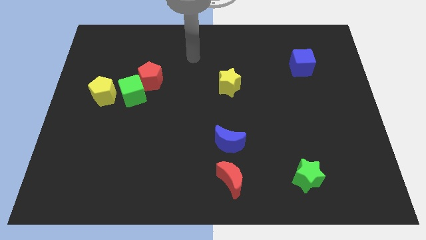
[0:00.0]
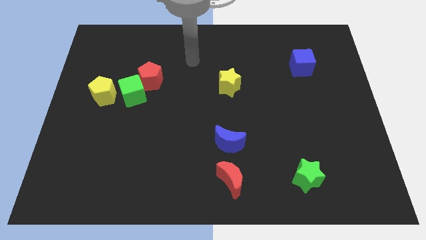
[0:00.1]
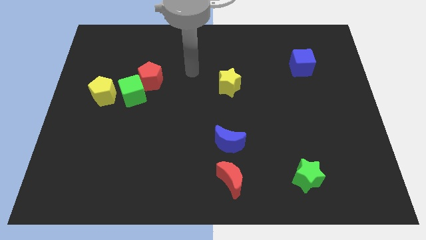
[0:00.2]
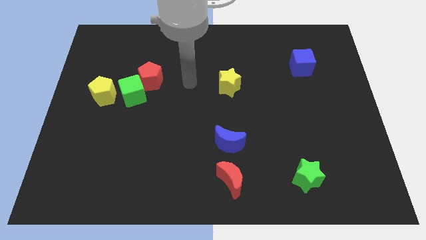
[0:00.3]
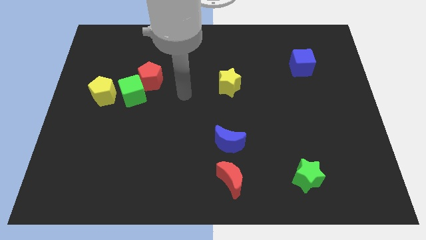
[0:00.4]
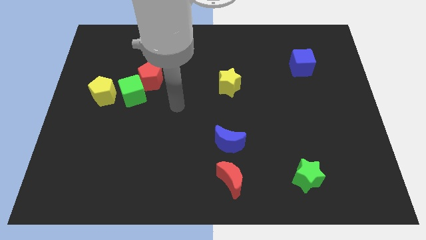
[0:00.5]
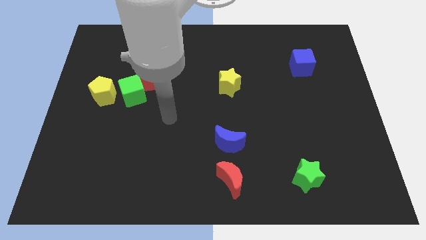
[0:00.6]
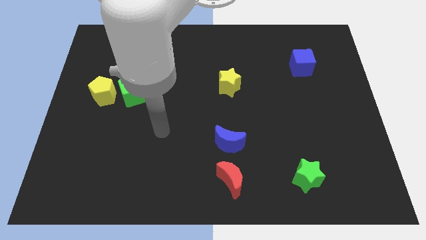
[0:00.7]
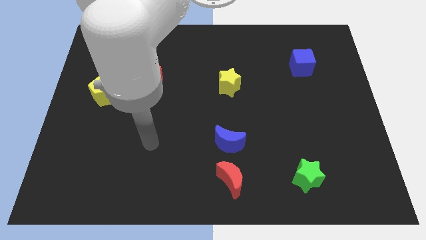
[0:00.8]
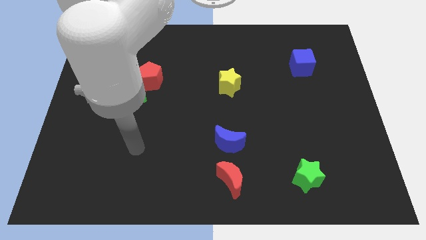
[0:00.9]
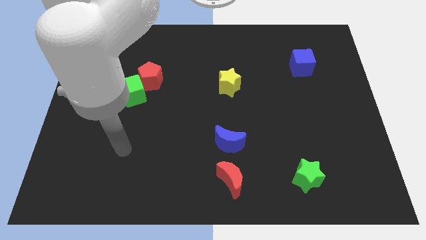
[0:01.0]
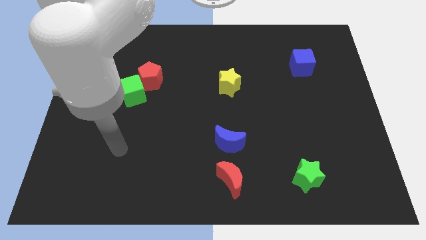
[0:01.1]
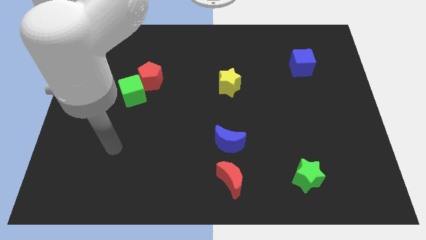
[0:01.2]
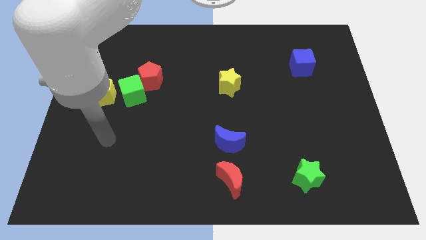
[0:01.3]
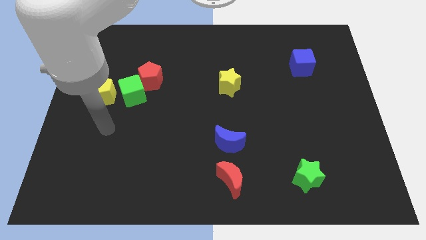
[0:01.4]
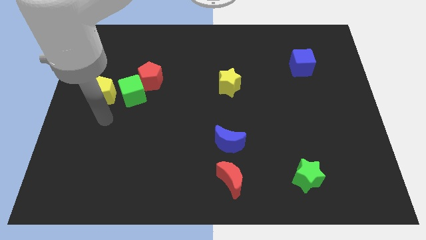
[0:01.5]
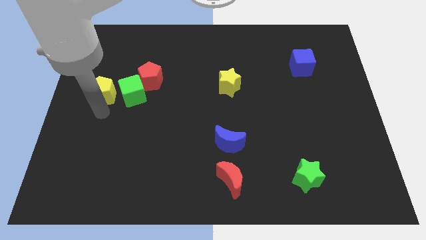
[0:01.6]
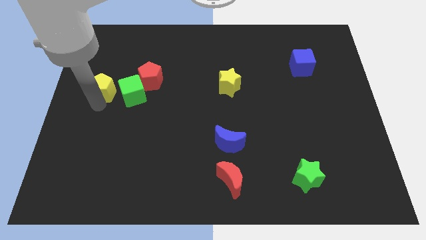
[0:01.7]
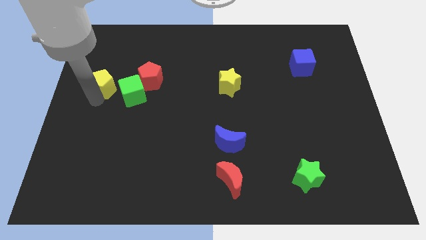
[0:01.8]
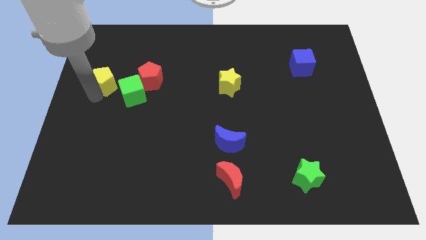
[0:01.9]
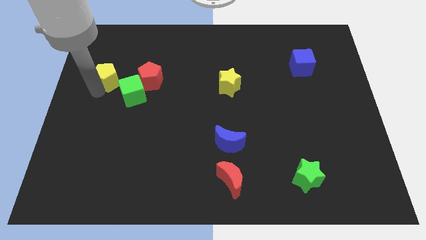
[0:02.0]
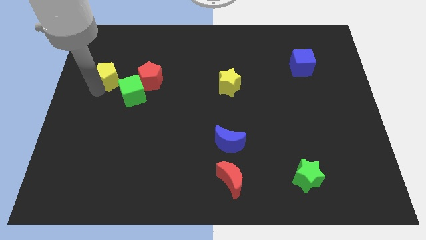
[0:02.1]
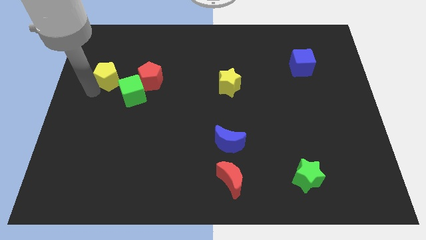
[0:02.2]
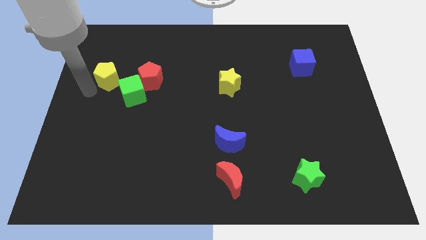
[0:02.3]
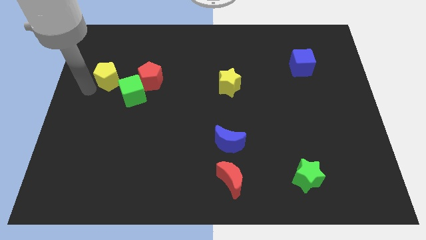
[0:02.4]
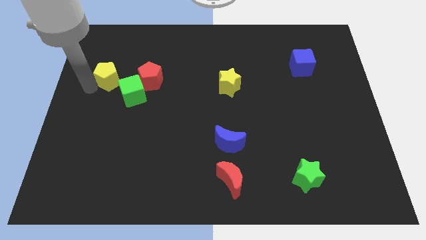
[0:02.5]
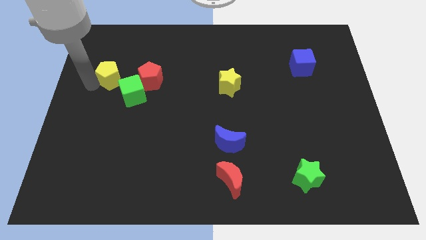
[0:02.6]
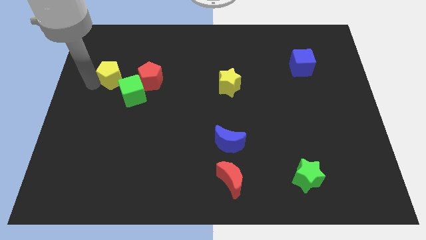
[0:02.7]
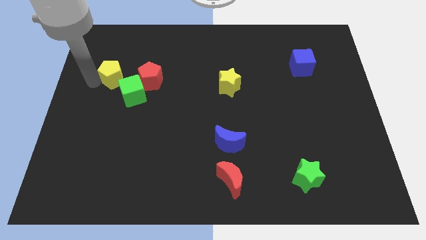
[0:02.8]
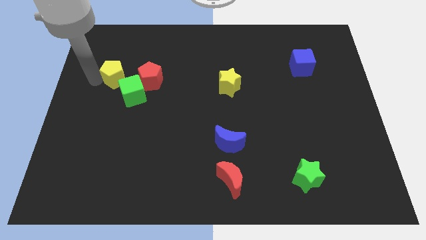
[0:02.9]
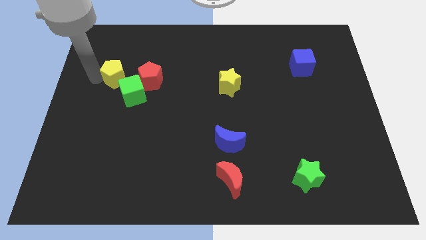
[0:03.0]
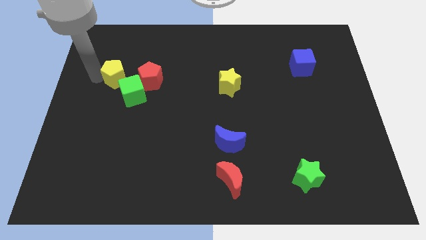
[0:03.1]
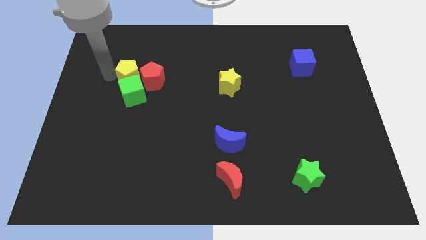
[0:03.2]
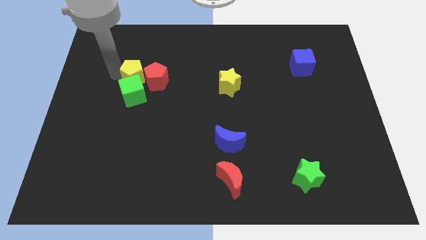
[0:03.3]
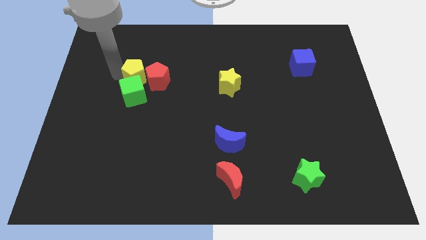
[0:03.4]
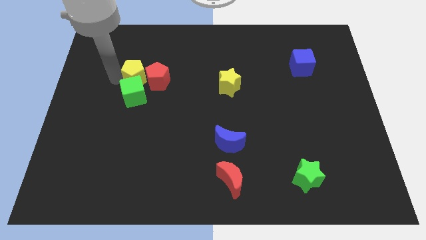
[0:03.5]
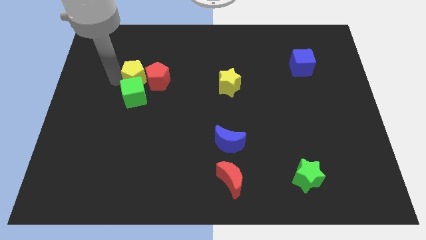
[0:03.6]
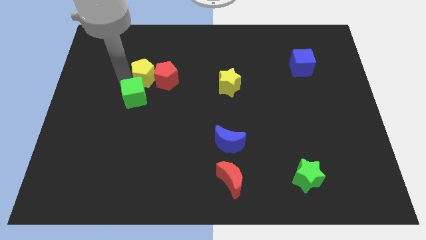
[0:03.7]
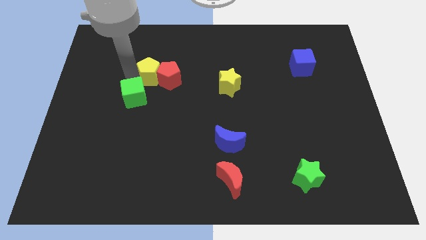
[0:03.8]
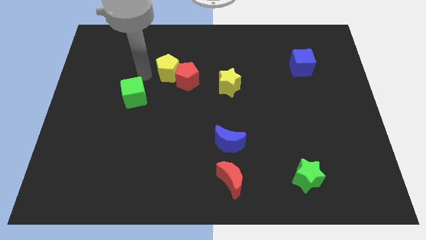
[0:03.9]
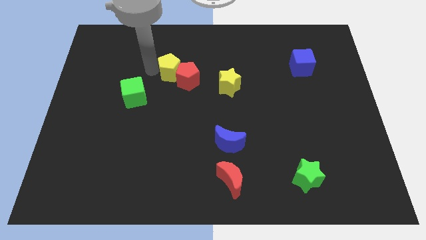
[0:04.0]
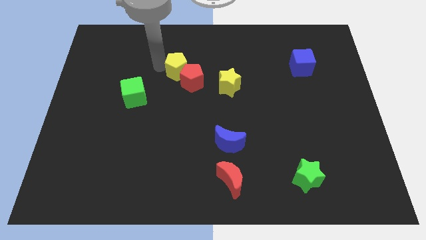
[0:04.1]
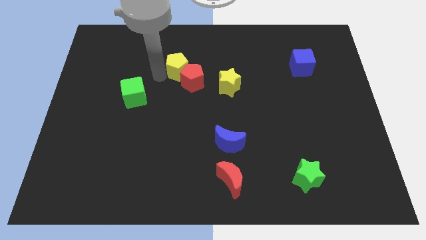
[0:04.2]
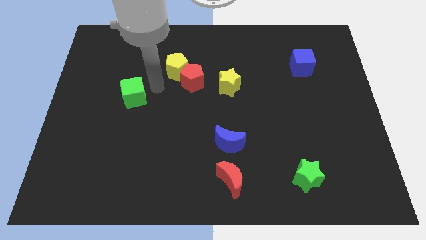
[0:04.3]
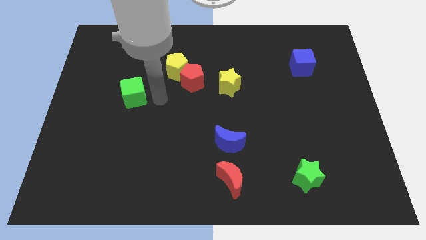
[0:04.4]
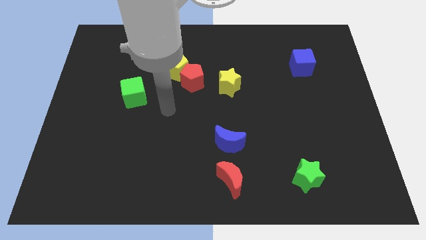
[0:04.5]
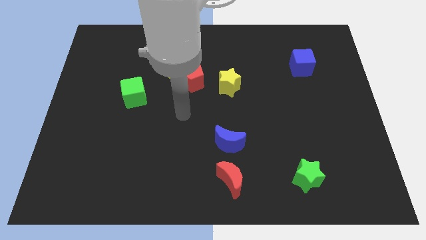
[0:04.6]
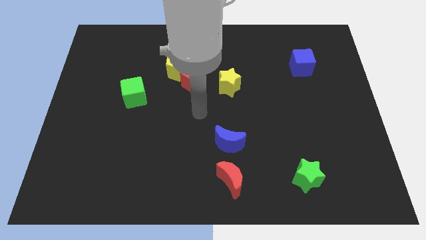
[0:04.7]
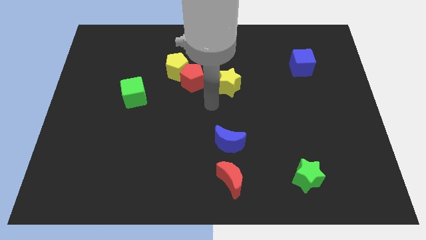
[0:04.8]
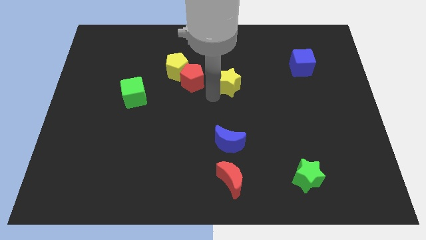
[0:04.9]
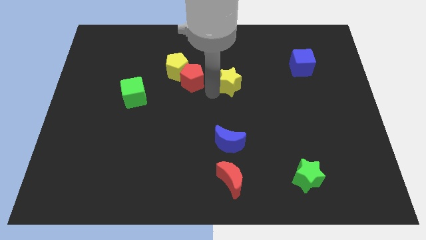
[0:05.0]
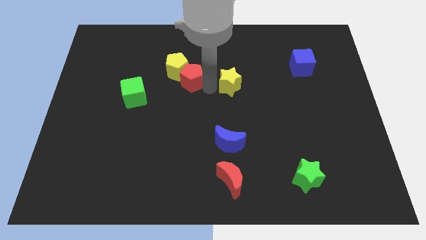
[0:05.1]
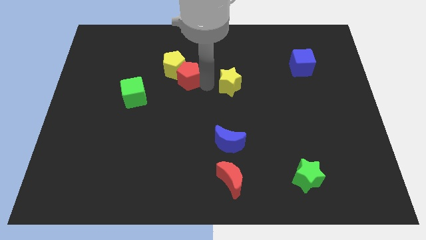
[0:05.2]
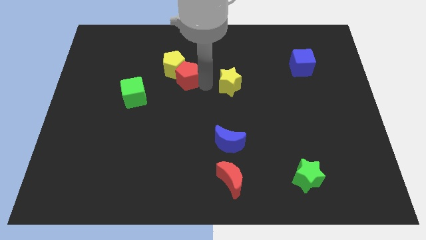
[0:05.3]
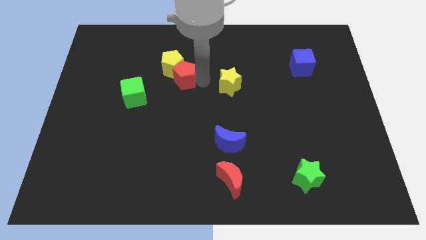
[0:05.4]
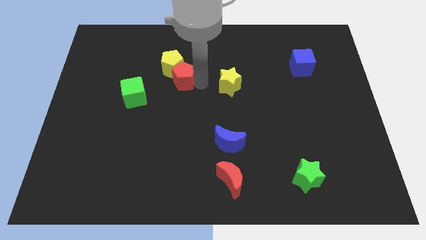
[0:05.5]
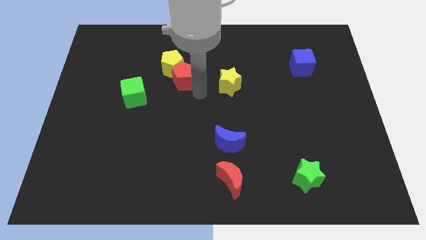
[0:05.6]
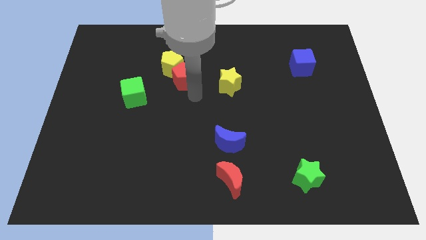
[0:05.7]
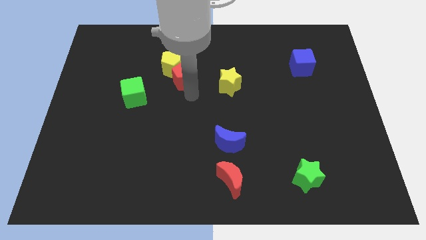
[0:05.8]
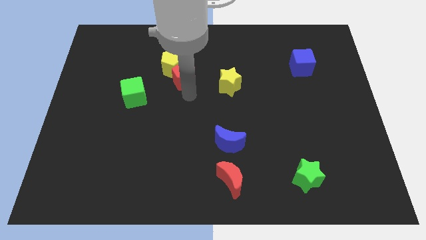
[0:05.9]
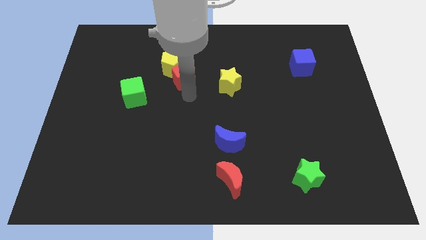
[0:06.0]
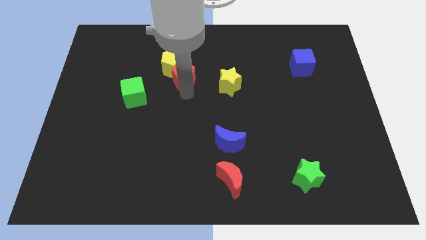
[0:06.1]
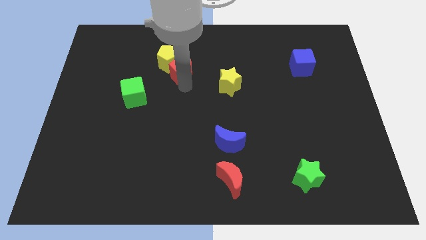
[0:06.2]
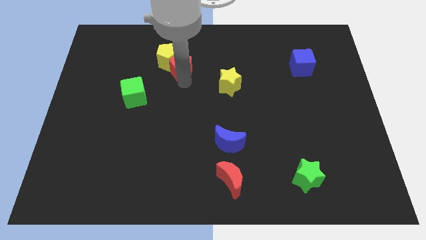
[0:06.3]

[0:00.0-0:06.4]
move the yellow pentagon above the red pentagon

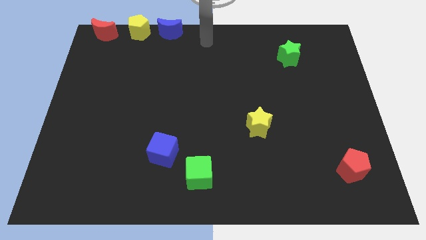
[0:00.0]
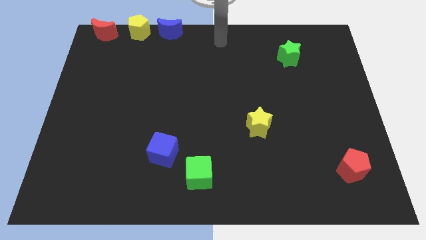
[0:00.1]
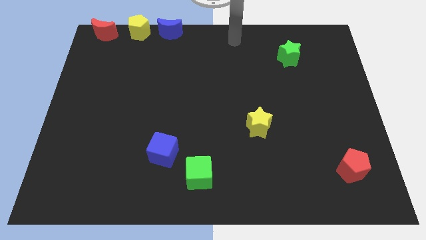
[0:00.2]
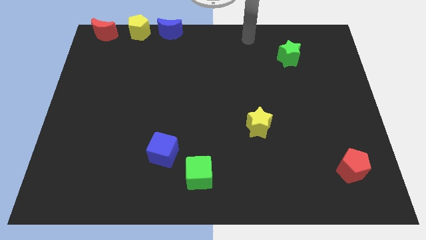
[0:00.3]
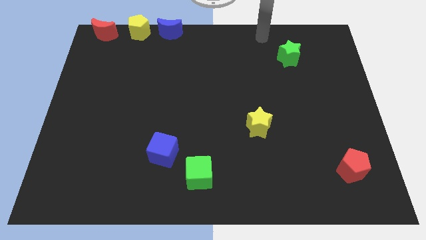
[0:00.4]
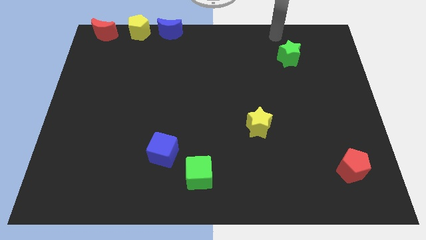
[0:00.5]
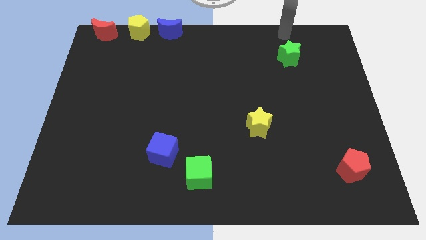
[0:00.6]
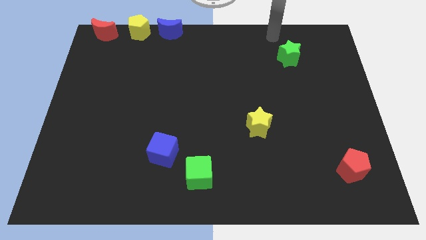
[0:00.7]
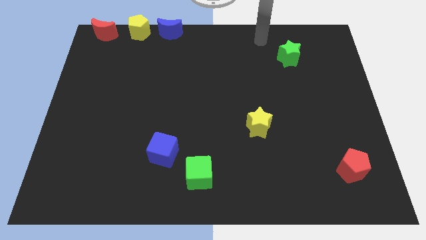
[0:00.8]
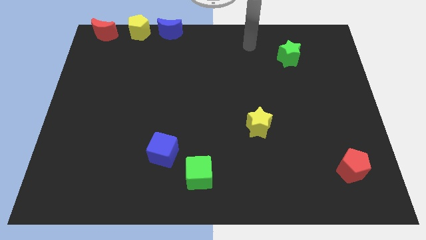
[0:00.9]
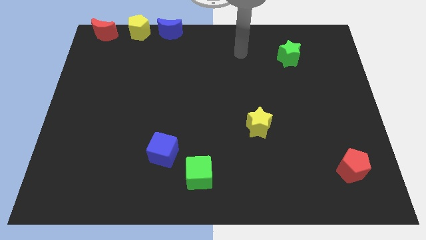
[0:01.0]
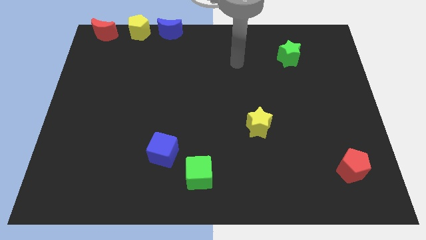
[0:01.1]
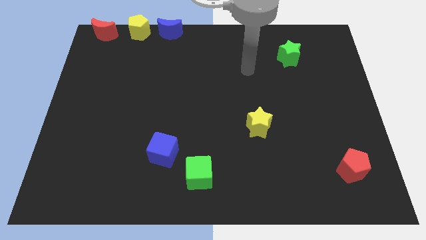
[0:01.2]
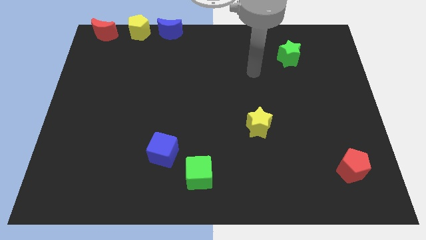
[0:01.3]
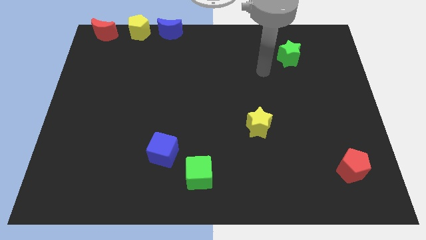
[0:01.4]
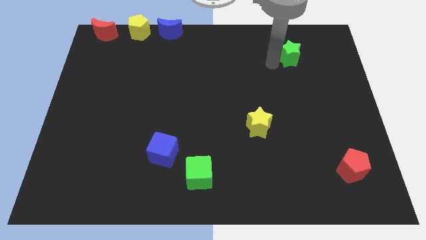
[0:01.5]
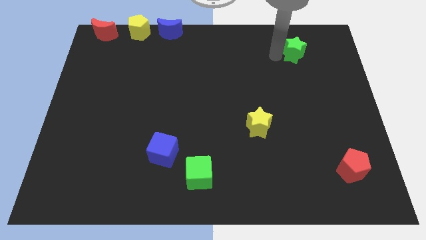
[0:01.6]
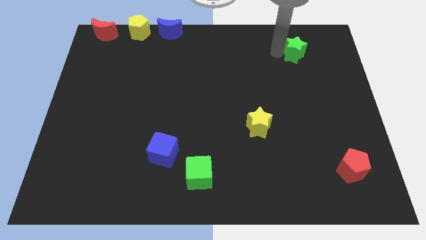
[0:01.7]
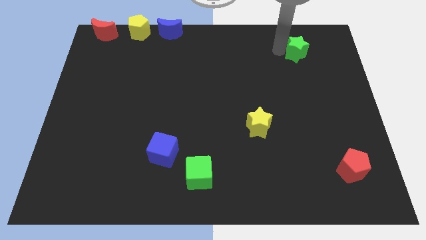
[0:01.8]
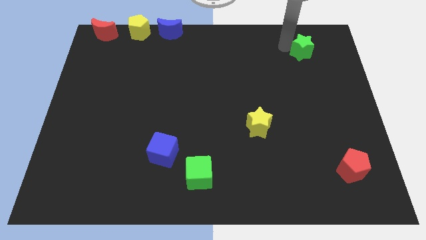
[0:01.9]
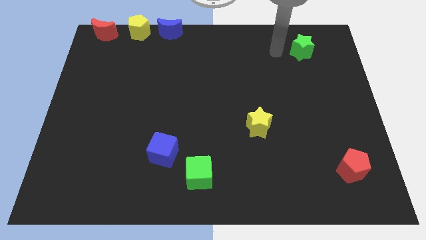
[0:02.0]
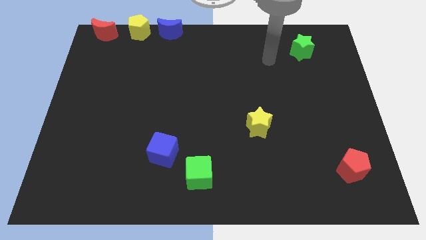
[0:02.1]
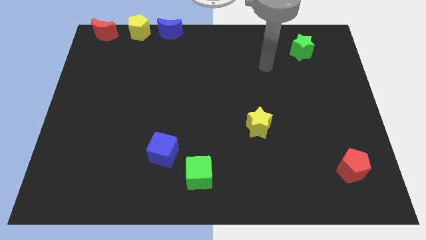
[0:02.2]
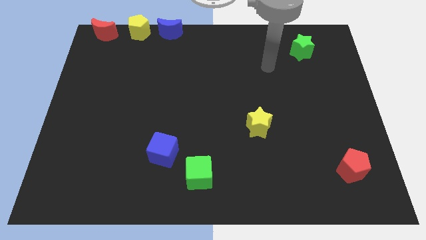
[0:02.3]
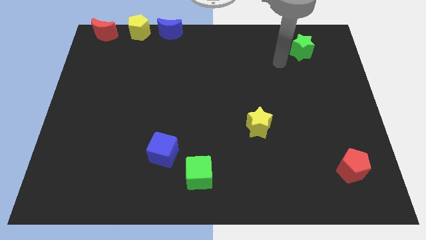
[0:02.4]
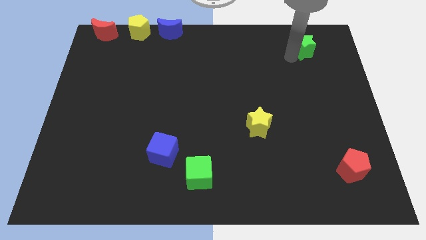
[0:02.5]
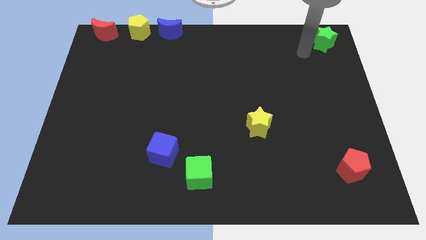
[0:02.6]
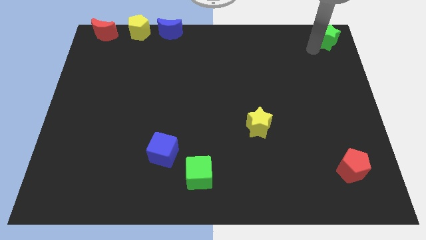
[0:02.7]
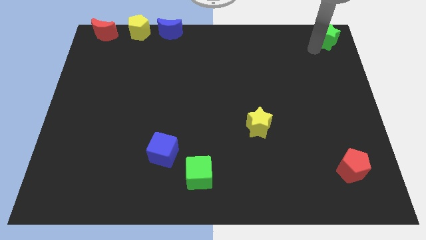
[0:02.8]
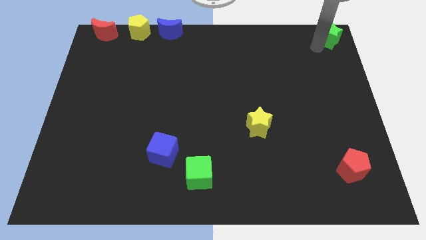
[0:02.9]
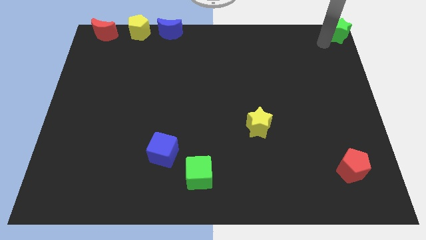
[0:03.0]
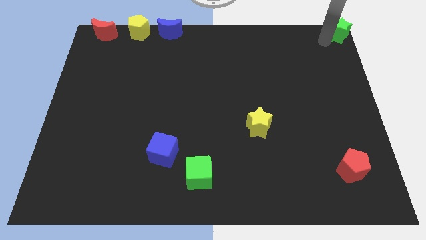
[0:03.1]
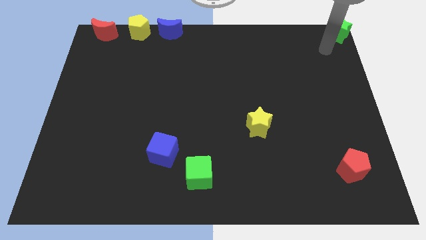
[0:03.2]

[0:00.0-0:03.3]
place the green star to the top right corner of the board
